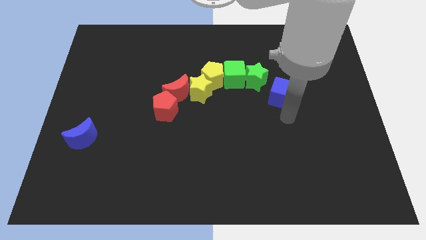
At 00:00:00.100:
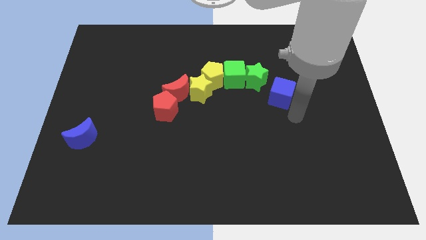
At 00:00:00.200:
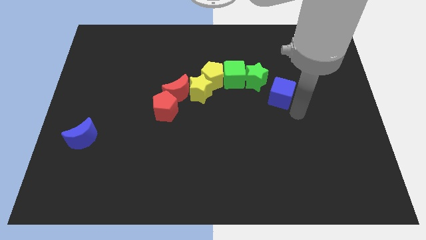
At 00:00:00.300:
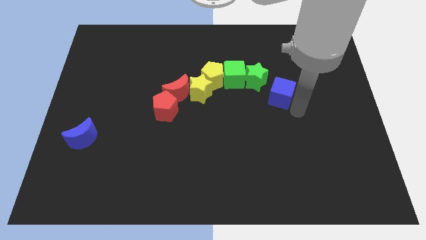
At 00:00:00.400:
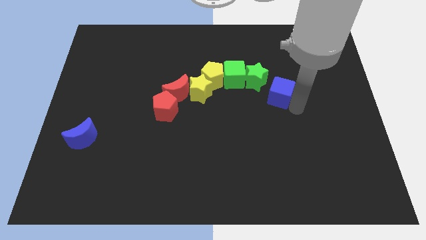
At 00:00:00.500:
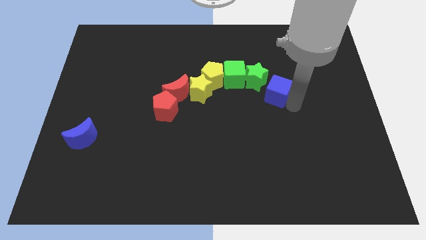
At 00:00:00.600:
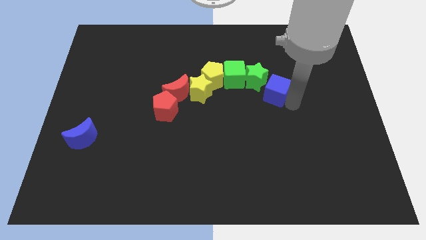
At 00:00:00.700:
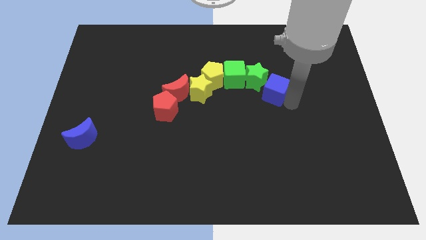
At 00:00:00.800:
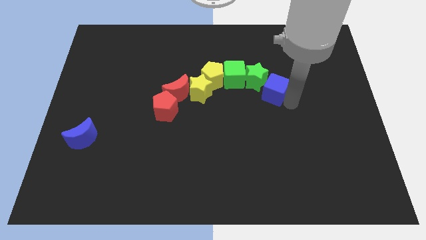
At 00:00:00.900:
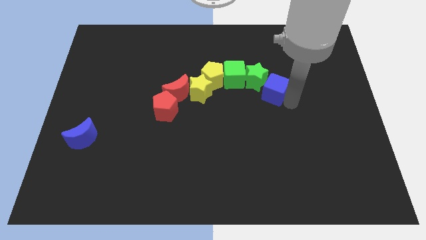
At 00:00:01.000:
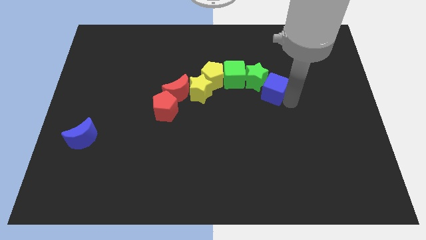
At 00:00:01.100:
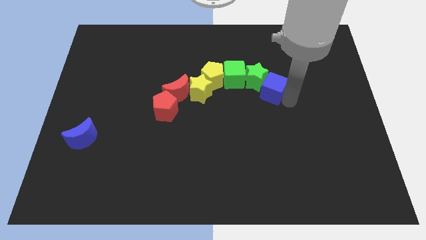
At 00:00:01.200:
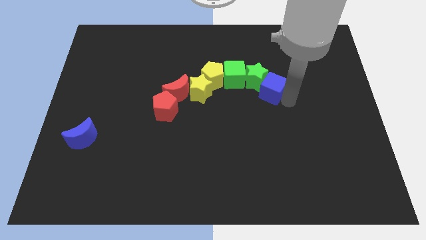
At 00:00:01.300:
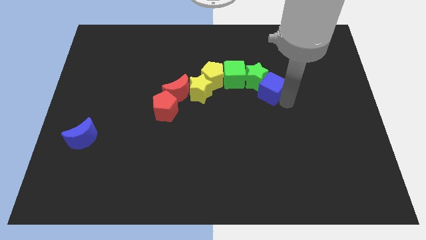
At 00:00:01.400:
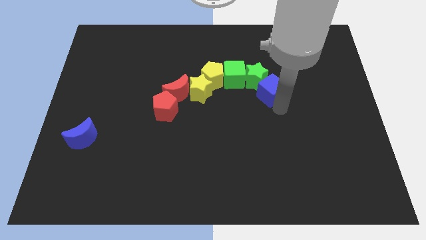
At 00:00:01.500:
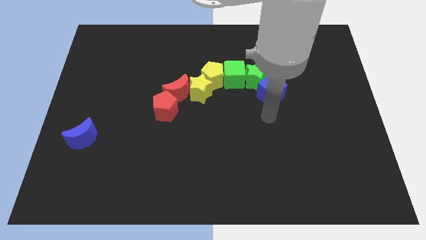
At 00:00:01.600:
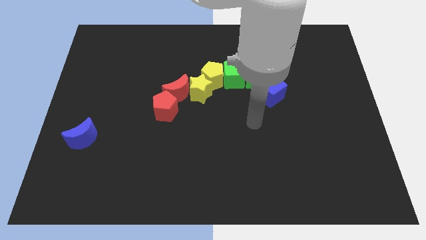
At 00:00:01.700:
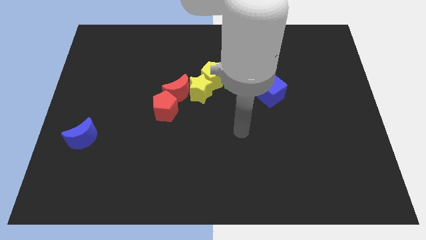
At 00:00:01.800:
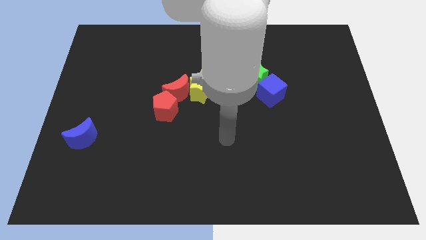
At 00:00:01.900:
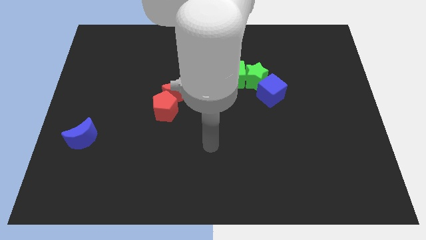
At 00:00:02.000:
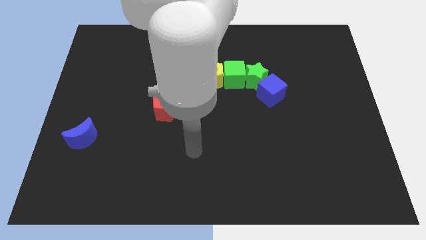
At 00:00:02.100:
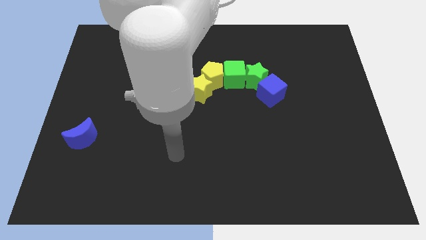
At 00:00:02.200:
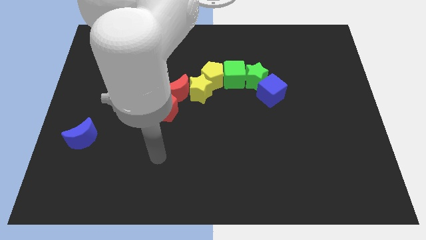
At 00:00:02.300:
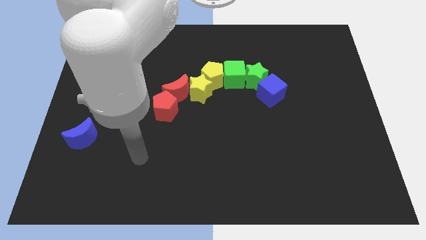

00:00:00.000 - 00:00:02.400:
place blue cube near green star

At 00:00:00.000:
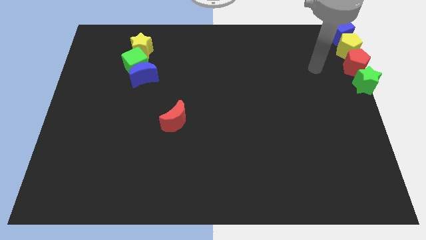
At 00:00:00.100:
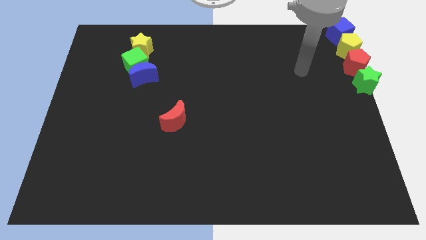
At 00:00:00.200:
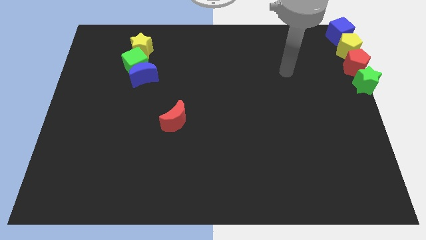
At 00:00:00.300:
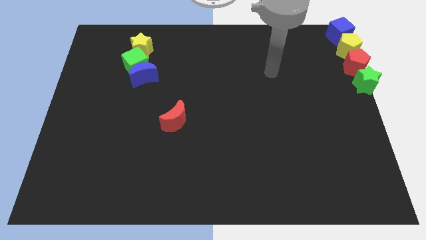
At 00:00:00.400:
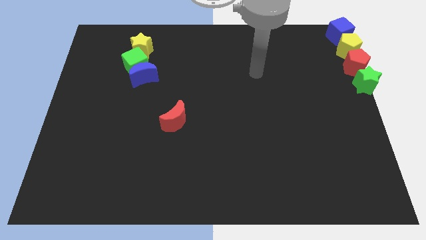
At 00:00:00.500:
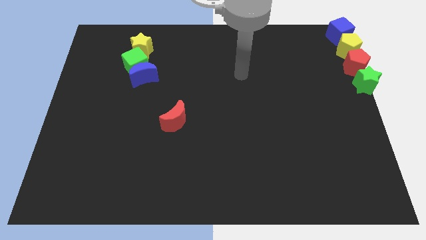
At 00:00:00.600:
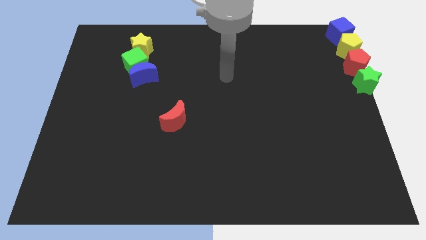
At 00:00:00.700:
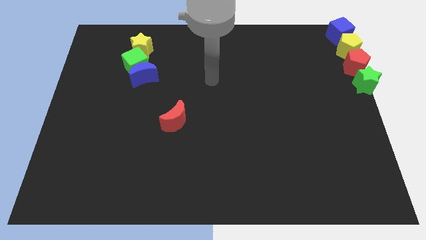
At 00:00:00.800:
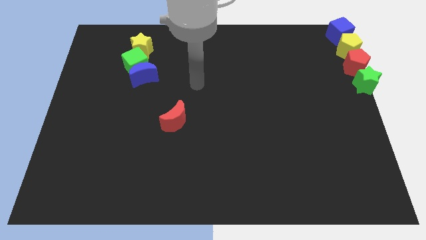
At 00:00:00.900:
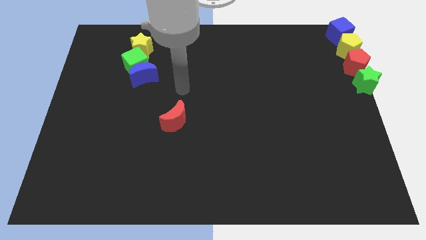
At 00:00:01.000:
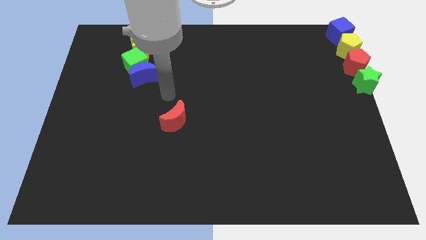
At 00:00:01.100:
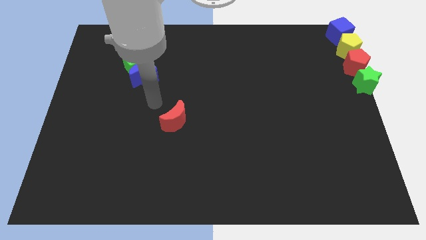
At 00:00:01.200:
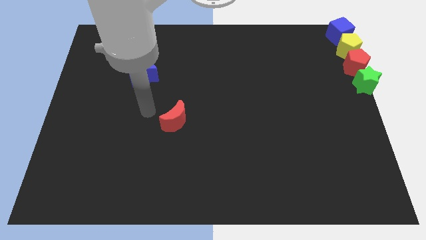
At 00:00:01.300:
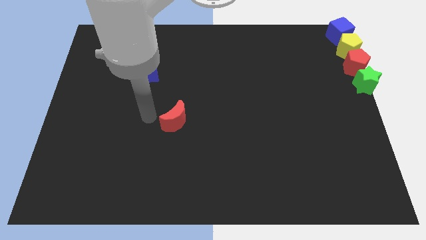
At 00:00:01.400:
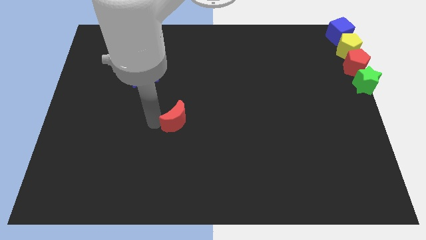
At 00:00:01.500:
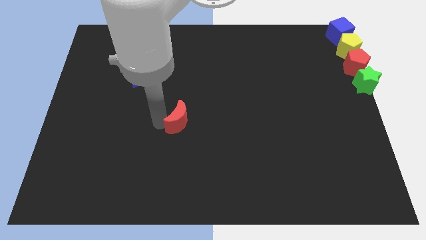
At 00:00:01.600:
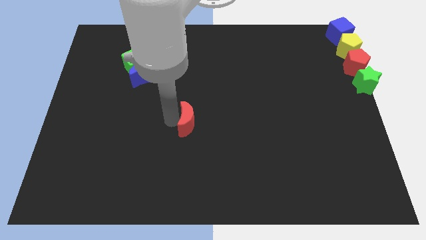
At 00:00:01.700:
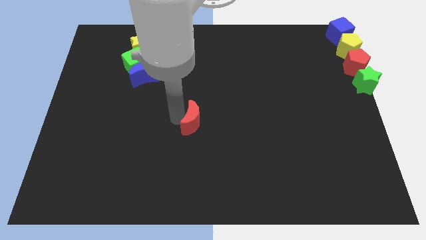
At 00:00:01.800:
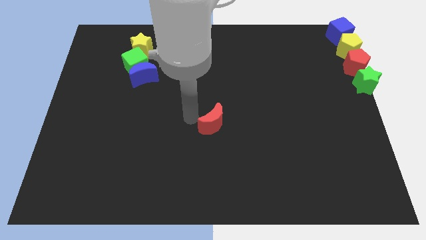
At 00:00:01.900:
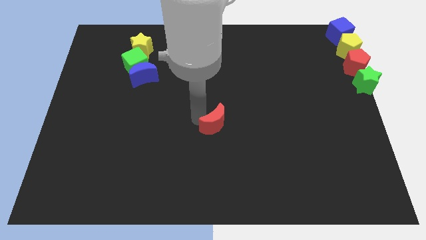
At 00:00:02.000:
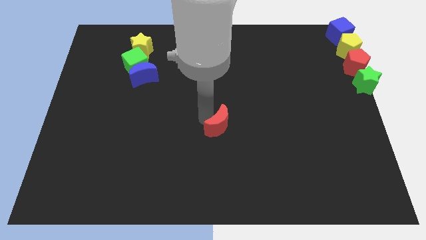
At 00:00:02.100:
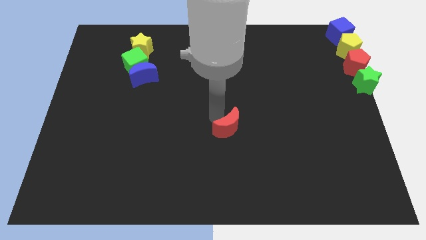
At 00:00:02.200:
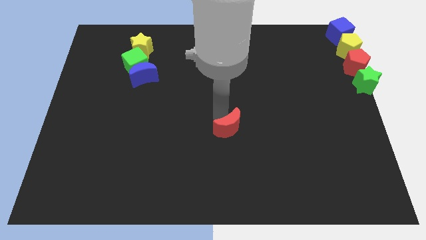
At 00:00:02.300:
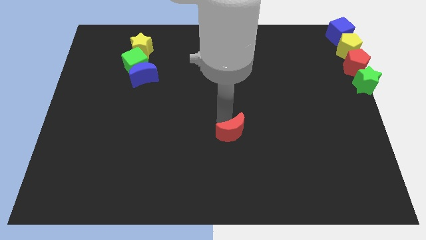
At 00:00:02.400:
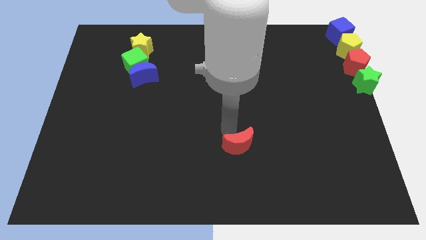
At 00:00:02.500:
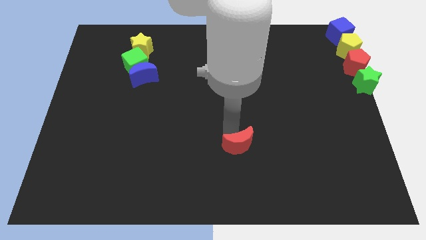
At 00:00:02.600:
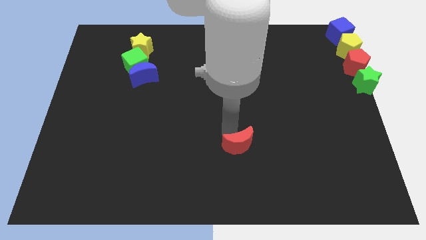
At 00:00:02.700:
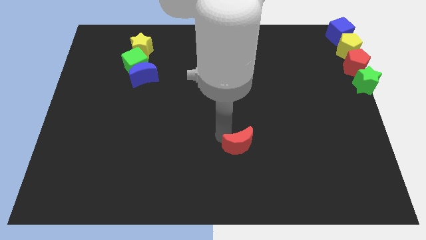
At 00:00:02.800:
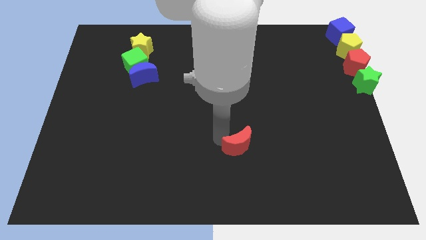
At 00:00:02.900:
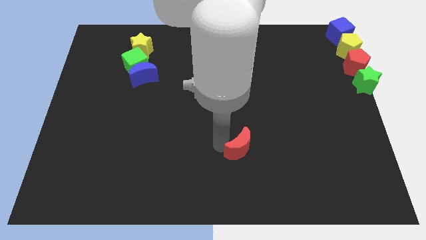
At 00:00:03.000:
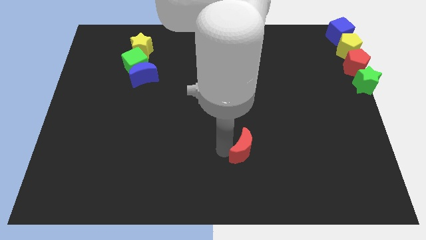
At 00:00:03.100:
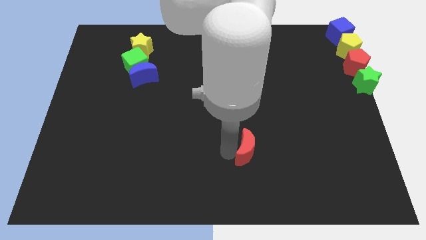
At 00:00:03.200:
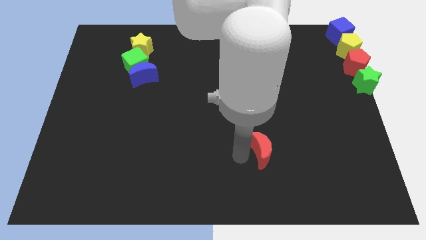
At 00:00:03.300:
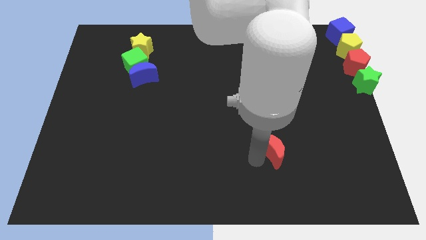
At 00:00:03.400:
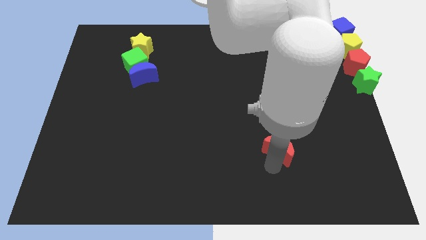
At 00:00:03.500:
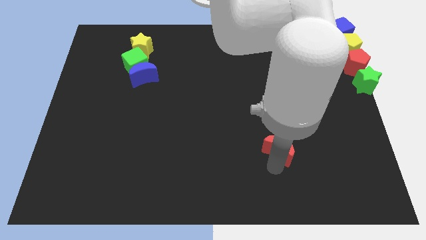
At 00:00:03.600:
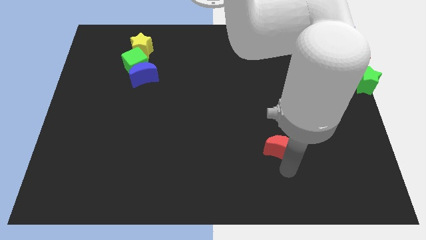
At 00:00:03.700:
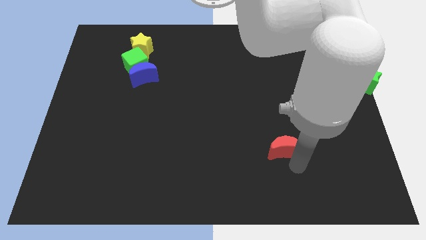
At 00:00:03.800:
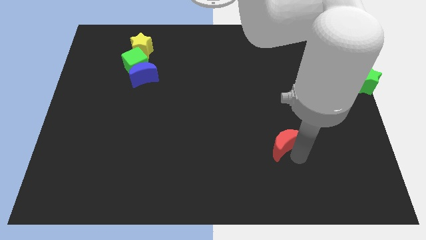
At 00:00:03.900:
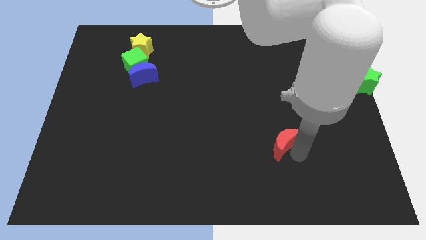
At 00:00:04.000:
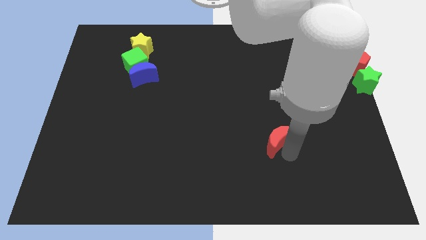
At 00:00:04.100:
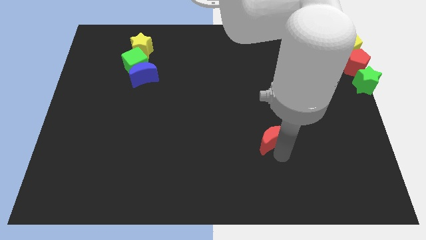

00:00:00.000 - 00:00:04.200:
move the red crescent slightly towards the bottom right of the board

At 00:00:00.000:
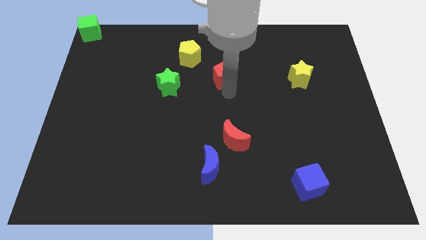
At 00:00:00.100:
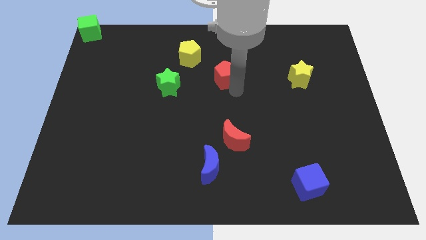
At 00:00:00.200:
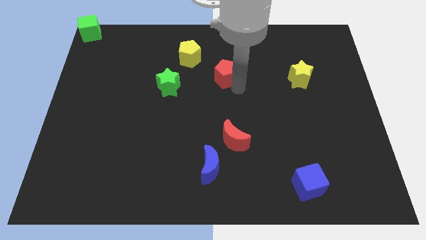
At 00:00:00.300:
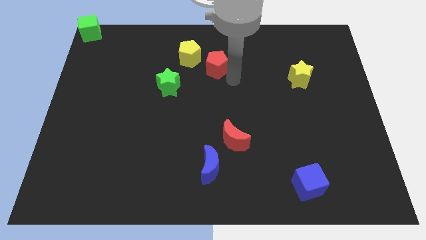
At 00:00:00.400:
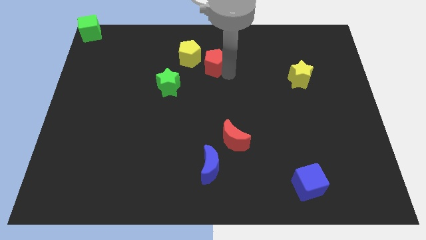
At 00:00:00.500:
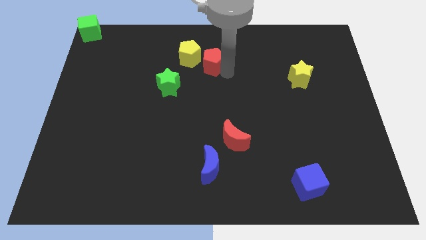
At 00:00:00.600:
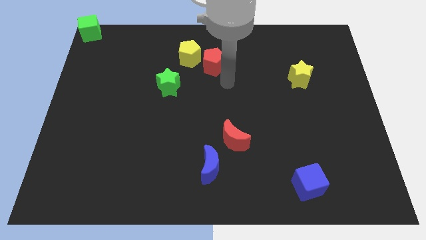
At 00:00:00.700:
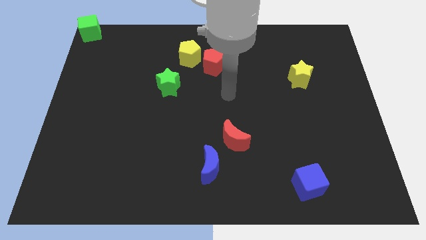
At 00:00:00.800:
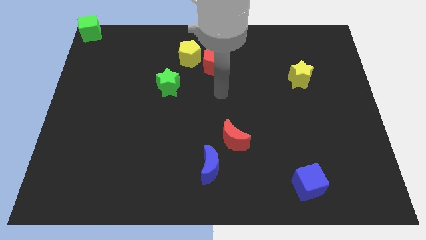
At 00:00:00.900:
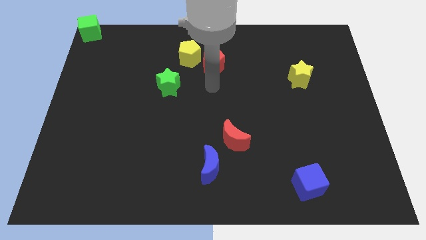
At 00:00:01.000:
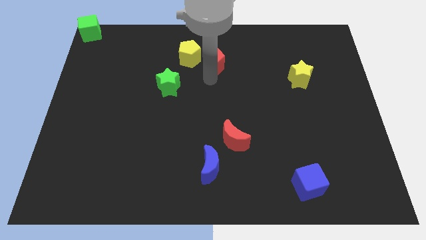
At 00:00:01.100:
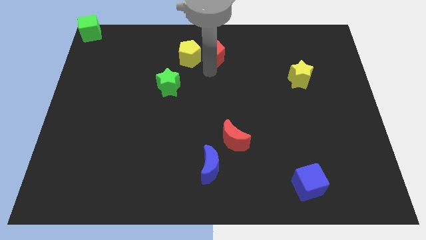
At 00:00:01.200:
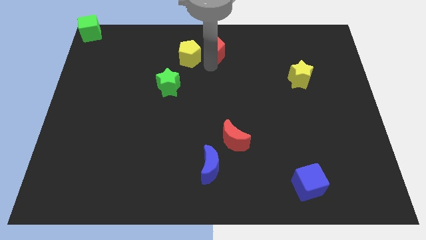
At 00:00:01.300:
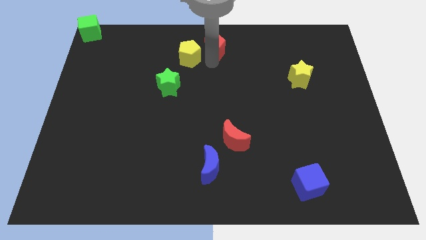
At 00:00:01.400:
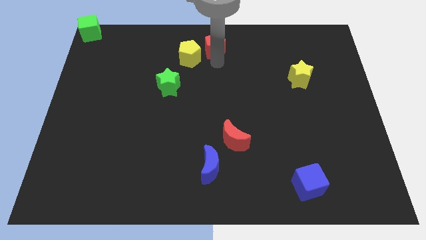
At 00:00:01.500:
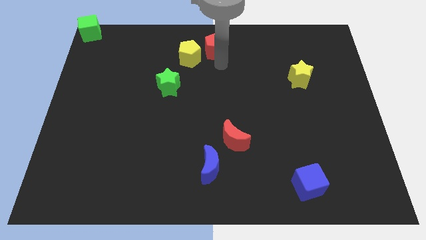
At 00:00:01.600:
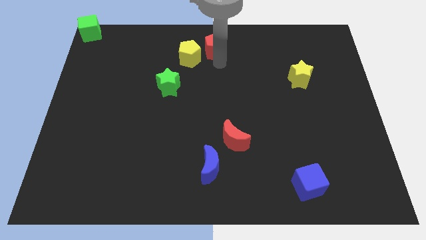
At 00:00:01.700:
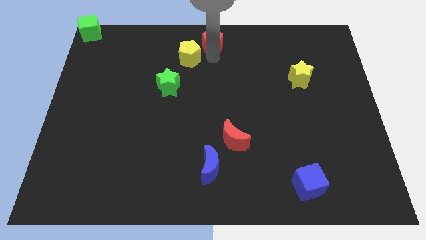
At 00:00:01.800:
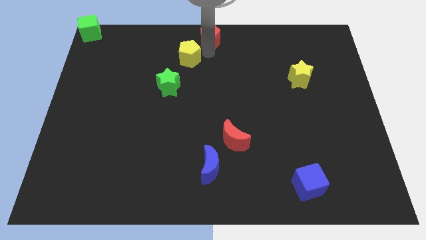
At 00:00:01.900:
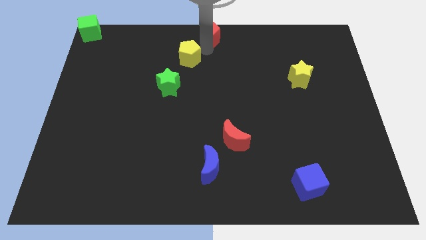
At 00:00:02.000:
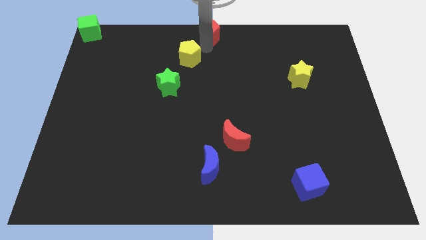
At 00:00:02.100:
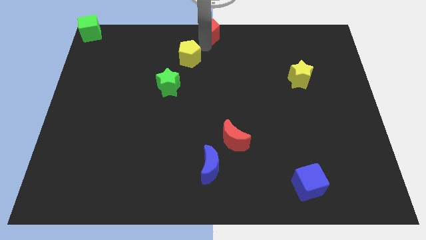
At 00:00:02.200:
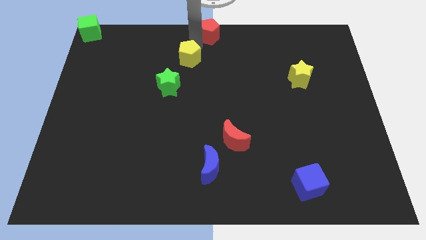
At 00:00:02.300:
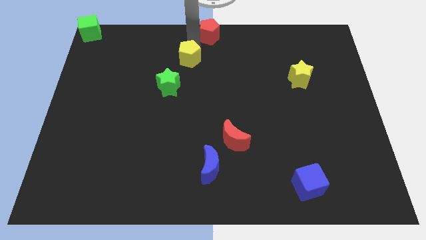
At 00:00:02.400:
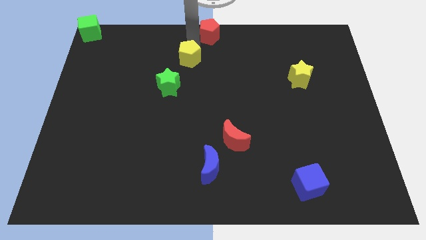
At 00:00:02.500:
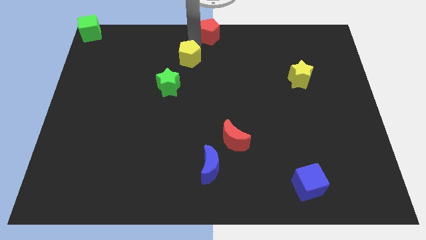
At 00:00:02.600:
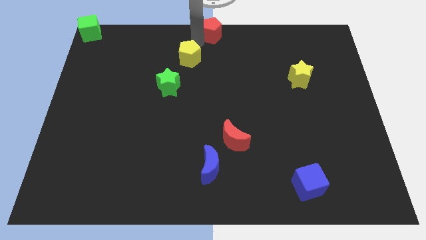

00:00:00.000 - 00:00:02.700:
push the red pentagon to the top center of the board
